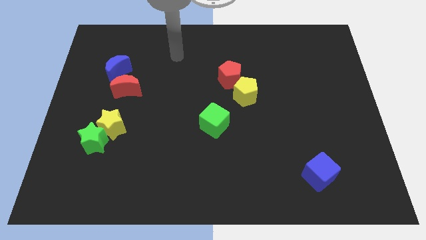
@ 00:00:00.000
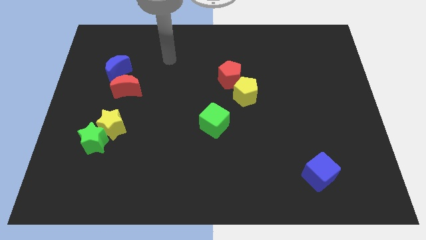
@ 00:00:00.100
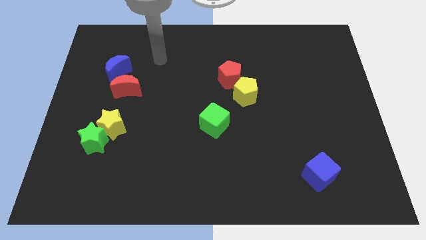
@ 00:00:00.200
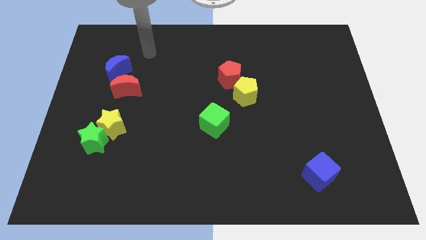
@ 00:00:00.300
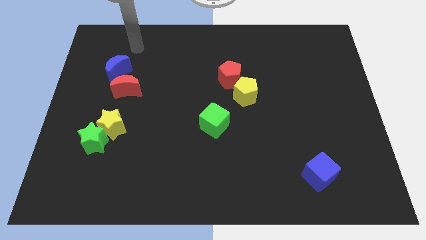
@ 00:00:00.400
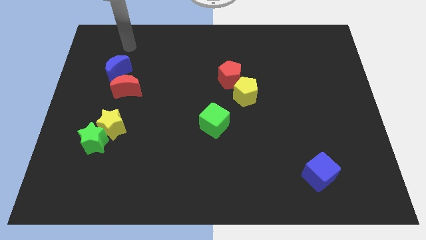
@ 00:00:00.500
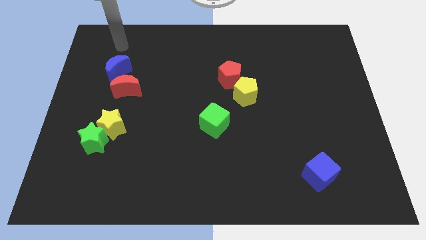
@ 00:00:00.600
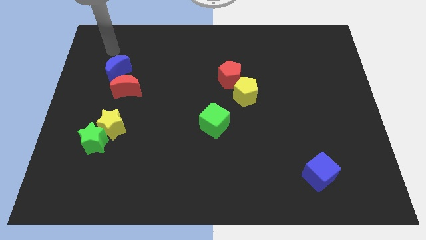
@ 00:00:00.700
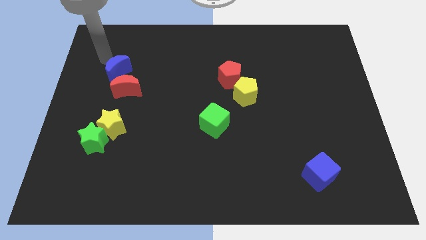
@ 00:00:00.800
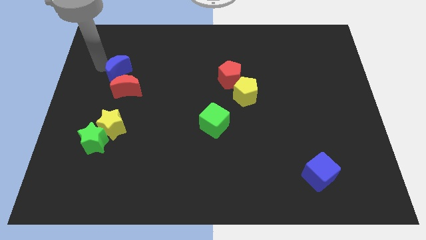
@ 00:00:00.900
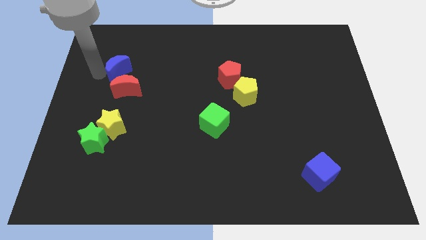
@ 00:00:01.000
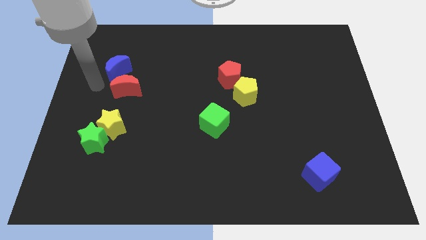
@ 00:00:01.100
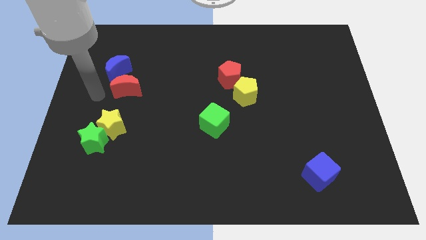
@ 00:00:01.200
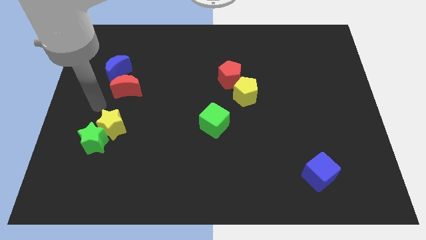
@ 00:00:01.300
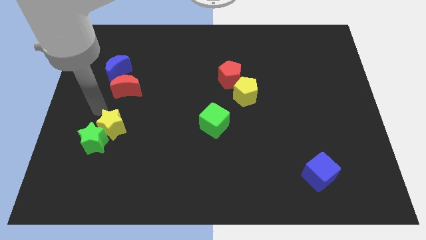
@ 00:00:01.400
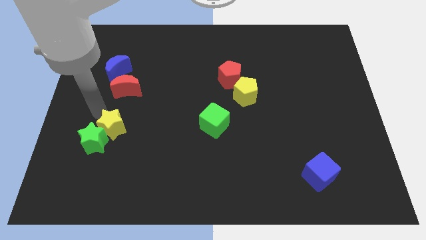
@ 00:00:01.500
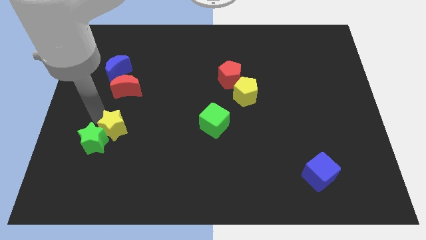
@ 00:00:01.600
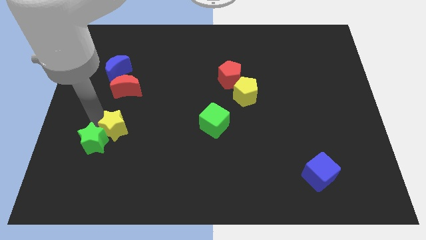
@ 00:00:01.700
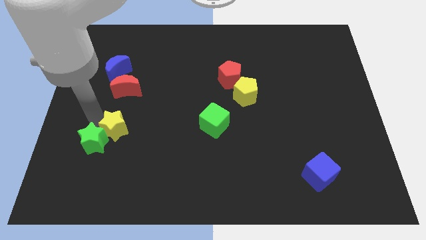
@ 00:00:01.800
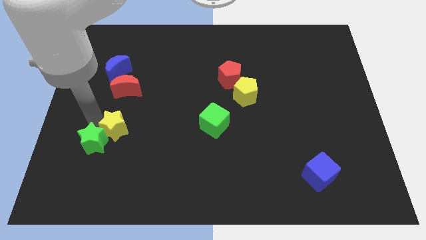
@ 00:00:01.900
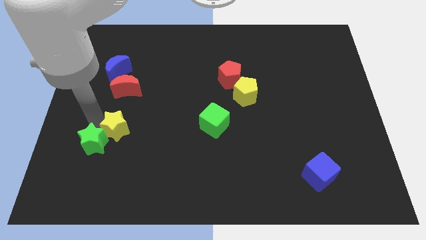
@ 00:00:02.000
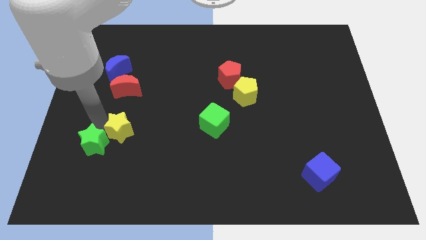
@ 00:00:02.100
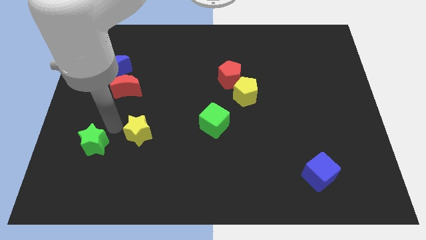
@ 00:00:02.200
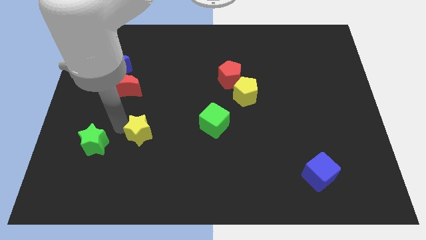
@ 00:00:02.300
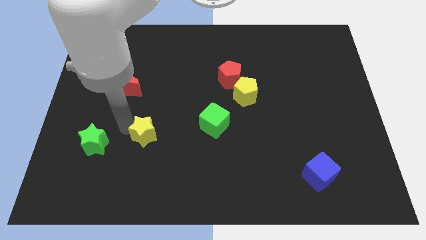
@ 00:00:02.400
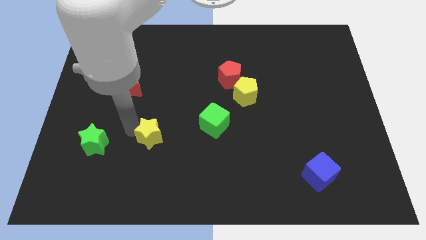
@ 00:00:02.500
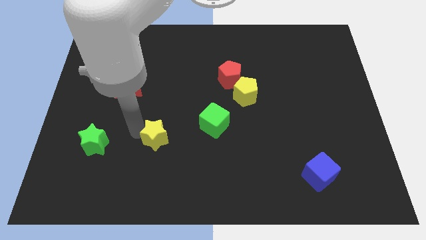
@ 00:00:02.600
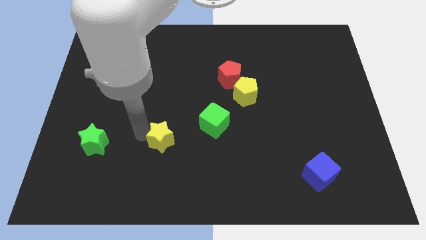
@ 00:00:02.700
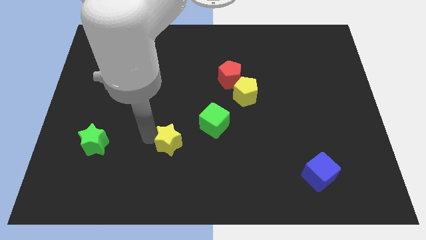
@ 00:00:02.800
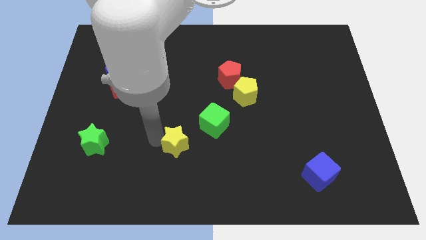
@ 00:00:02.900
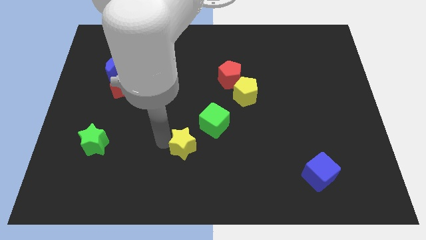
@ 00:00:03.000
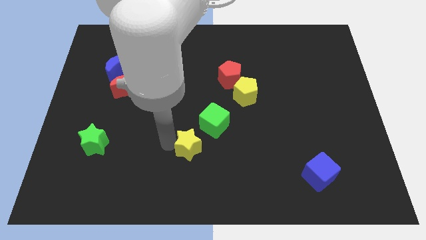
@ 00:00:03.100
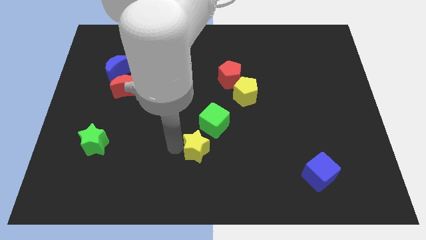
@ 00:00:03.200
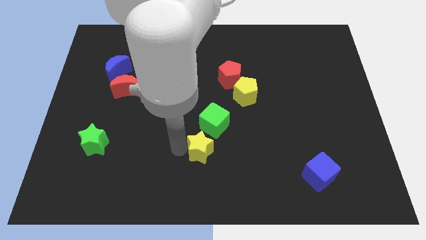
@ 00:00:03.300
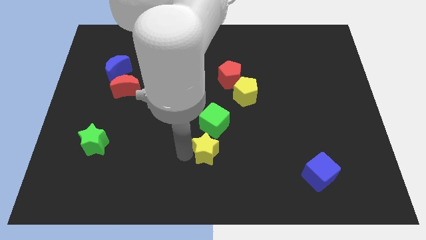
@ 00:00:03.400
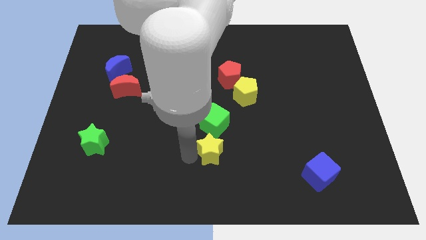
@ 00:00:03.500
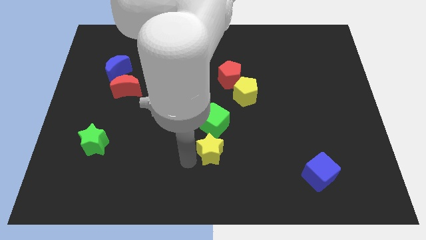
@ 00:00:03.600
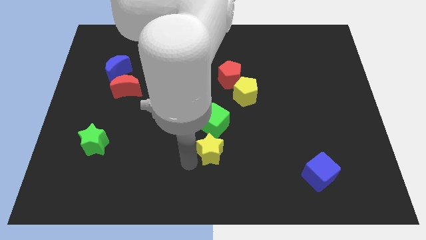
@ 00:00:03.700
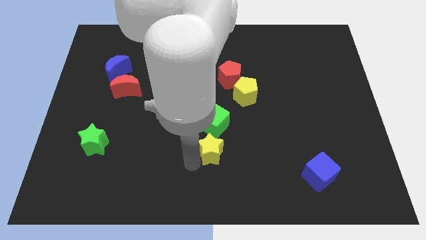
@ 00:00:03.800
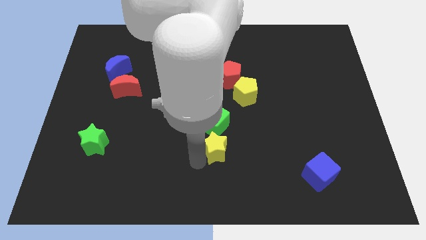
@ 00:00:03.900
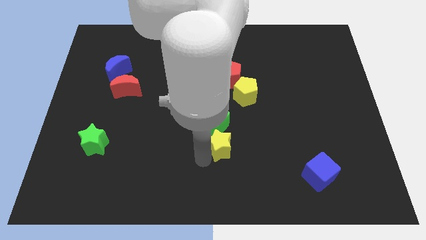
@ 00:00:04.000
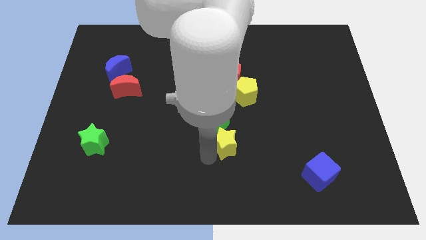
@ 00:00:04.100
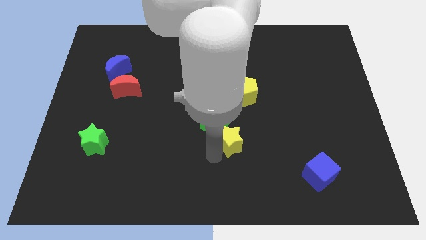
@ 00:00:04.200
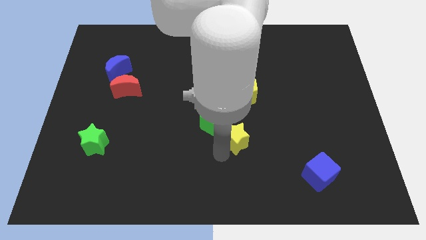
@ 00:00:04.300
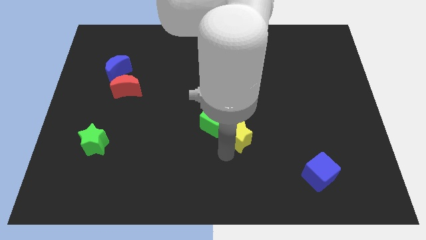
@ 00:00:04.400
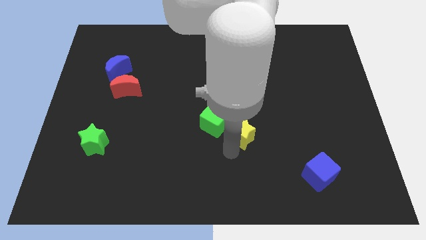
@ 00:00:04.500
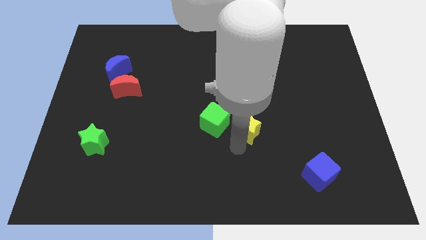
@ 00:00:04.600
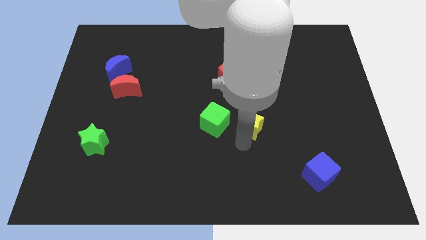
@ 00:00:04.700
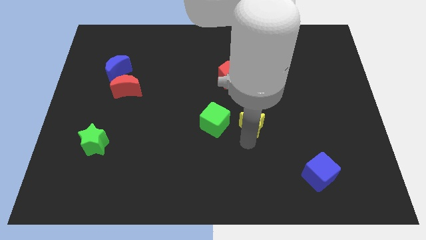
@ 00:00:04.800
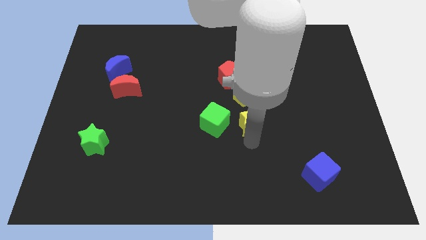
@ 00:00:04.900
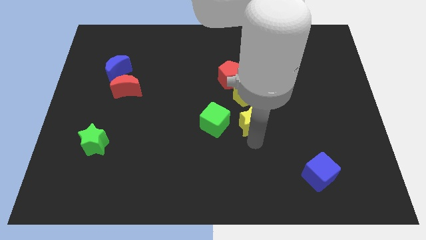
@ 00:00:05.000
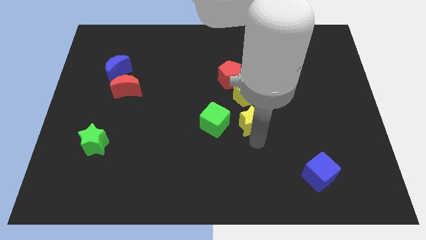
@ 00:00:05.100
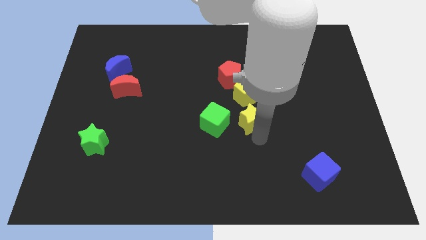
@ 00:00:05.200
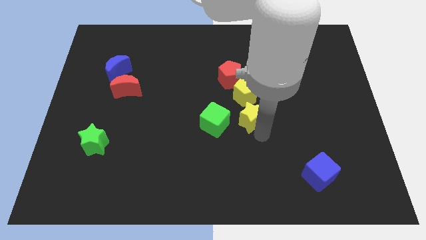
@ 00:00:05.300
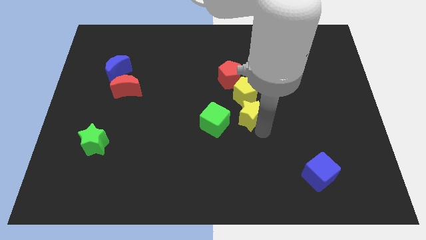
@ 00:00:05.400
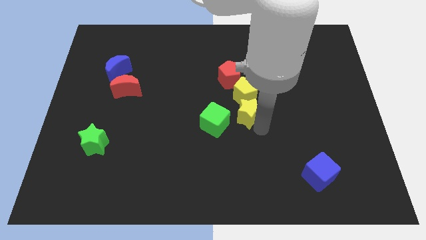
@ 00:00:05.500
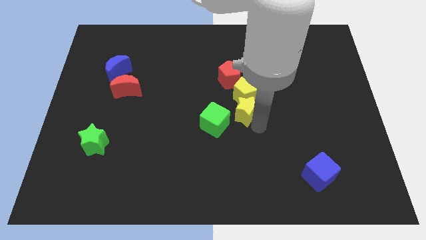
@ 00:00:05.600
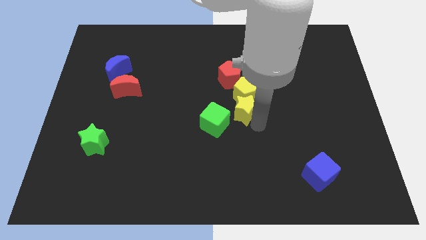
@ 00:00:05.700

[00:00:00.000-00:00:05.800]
put the yellow star next to the yellow pentagon

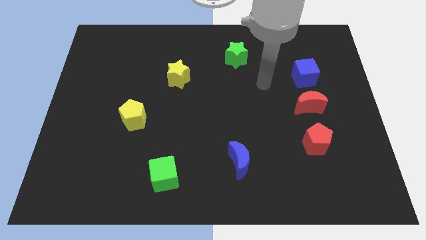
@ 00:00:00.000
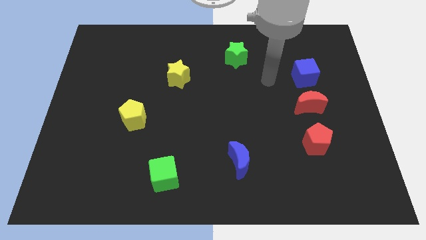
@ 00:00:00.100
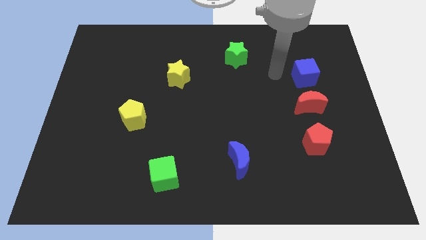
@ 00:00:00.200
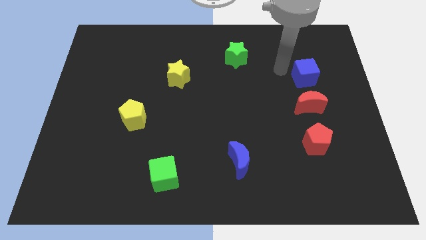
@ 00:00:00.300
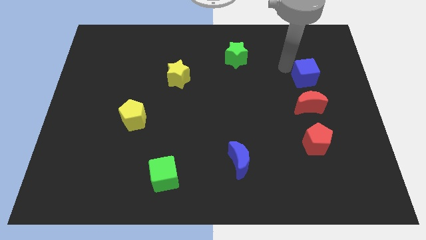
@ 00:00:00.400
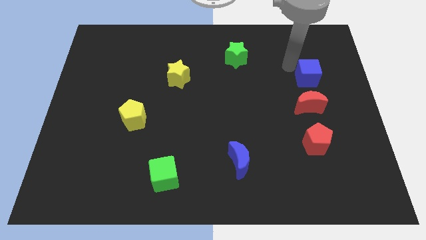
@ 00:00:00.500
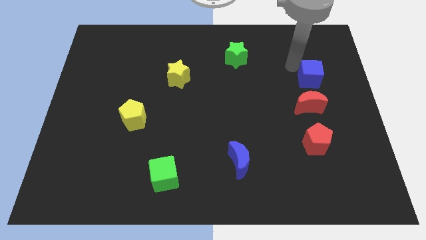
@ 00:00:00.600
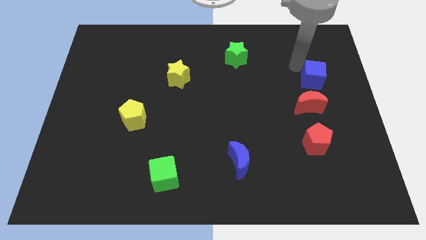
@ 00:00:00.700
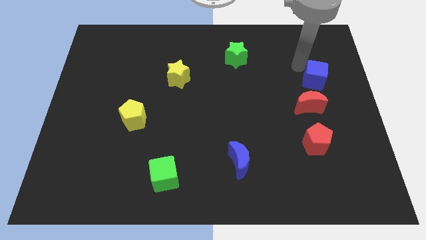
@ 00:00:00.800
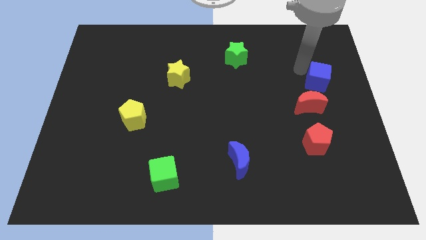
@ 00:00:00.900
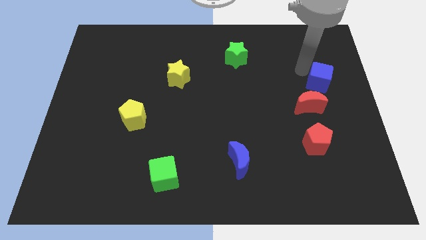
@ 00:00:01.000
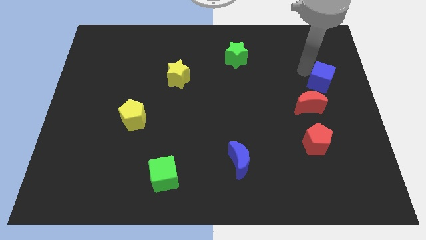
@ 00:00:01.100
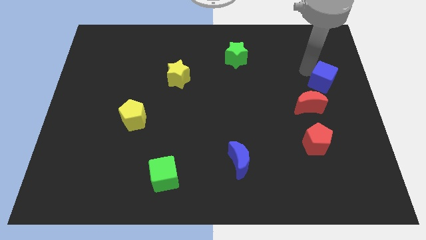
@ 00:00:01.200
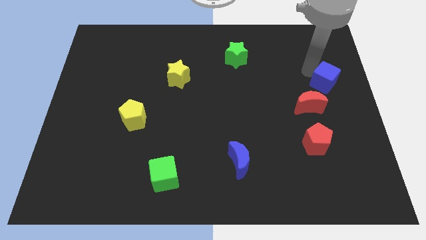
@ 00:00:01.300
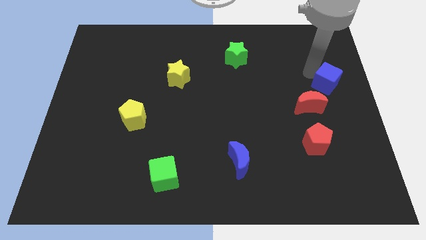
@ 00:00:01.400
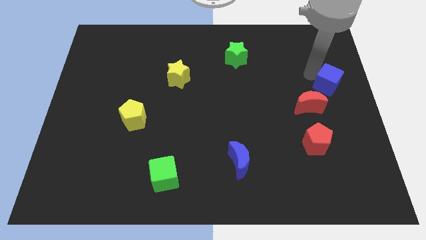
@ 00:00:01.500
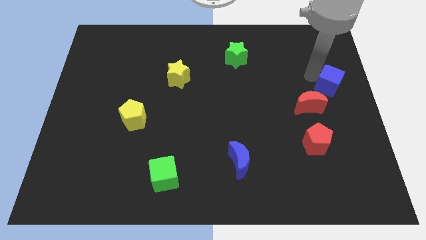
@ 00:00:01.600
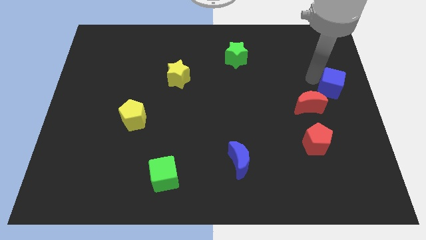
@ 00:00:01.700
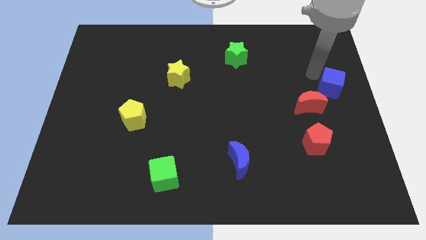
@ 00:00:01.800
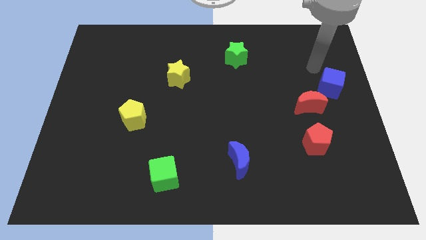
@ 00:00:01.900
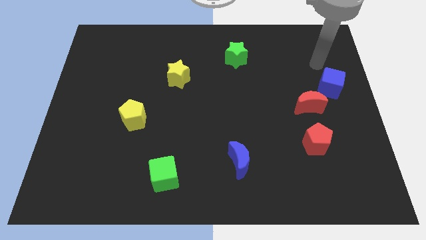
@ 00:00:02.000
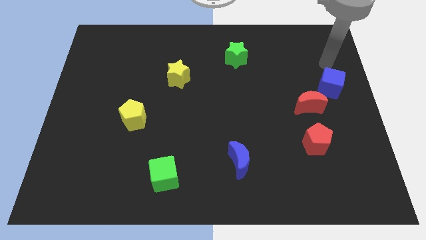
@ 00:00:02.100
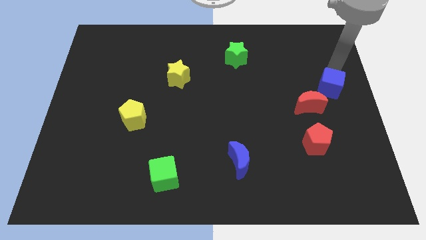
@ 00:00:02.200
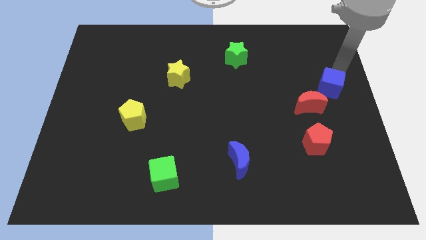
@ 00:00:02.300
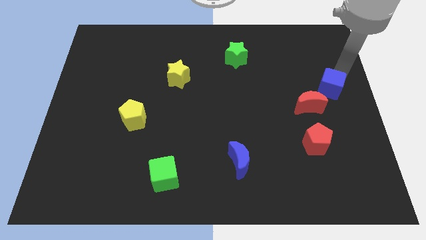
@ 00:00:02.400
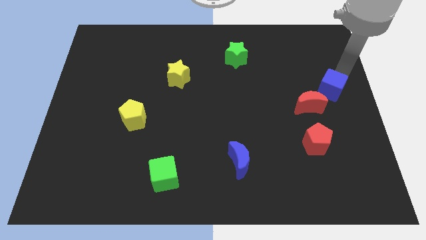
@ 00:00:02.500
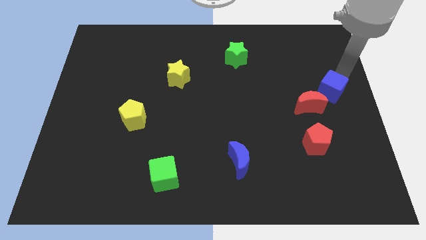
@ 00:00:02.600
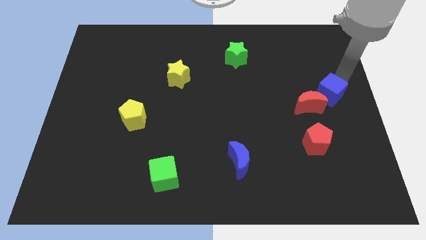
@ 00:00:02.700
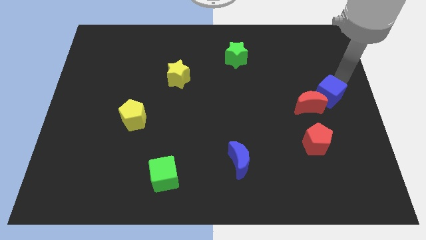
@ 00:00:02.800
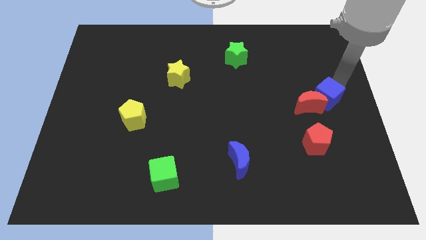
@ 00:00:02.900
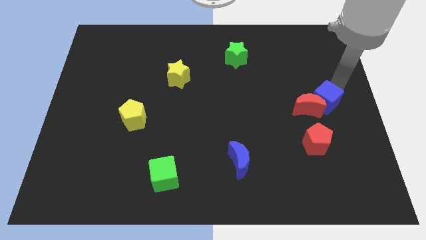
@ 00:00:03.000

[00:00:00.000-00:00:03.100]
slide the blue cube to the red moon
